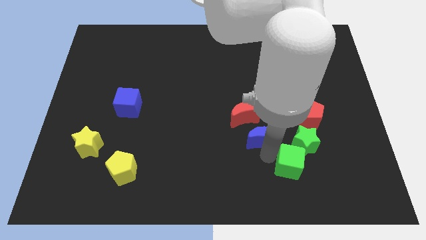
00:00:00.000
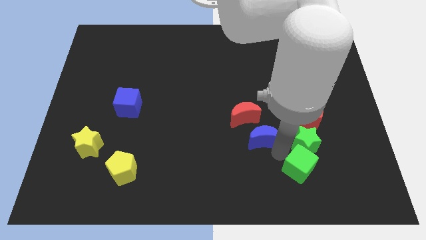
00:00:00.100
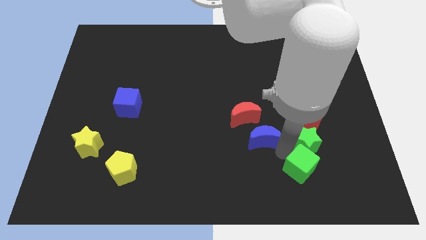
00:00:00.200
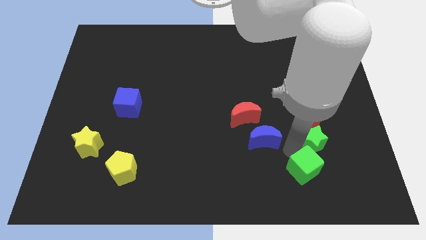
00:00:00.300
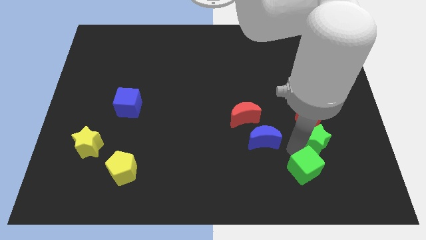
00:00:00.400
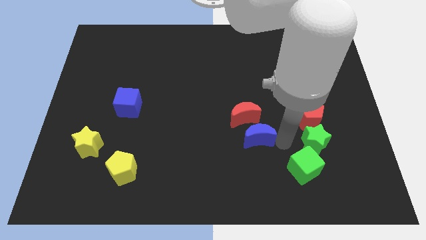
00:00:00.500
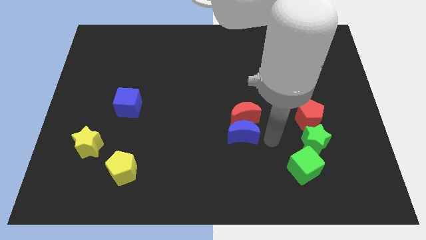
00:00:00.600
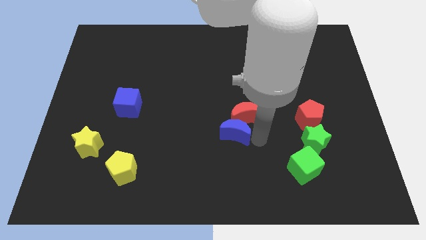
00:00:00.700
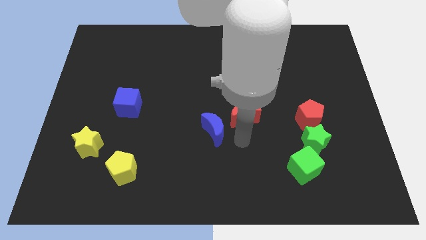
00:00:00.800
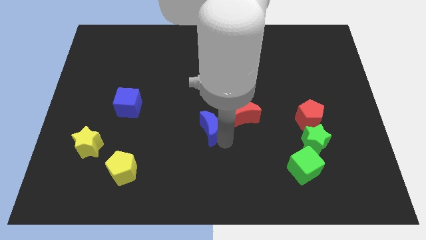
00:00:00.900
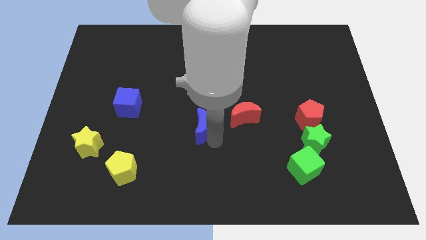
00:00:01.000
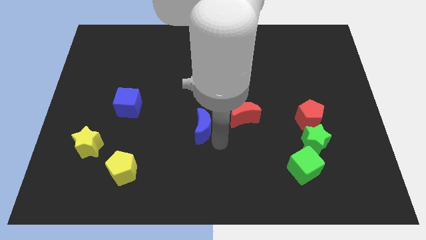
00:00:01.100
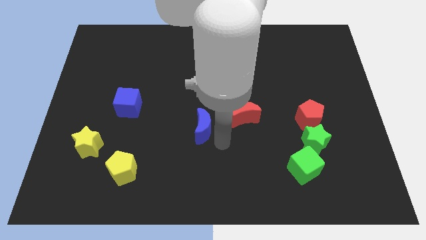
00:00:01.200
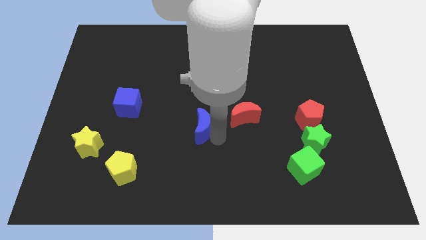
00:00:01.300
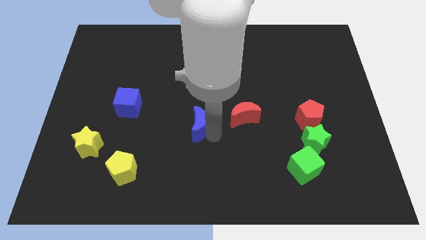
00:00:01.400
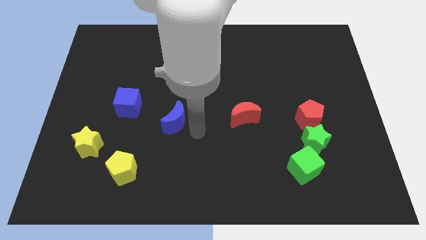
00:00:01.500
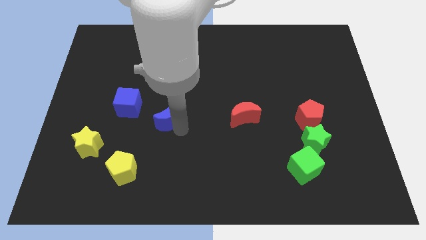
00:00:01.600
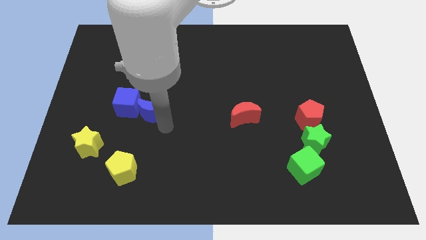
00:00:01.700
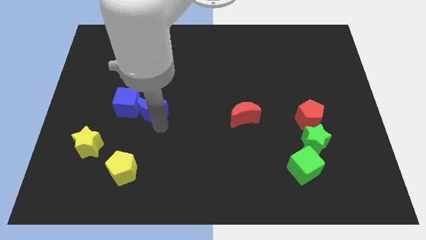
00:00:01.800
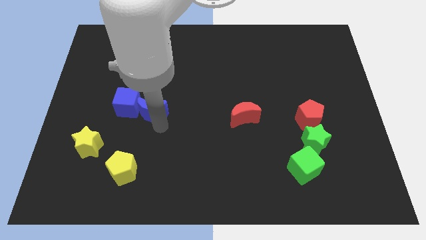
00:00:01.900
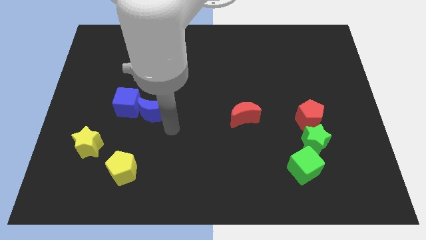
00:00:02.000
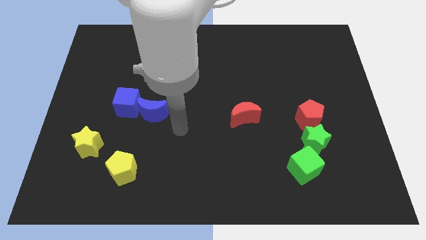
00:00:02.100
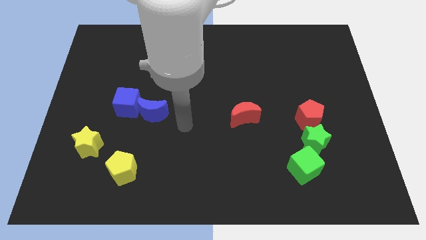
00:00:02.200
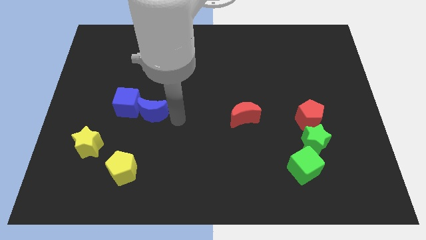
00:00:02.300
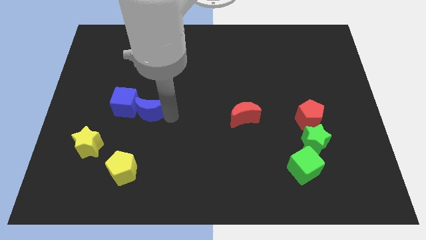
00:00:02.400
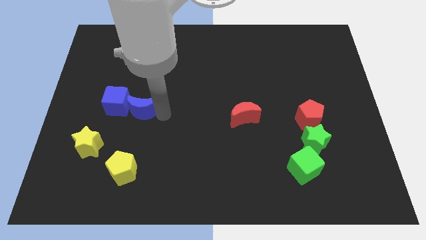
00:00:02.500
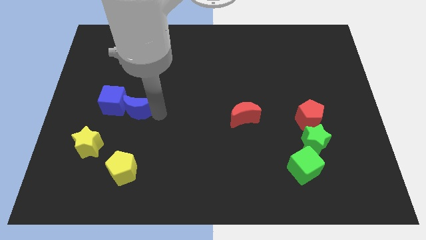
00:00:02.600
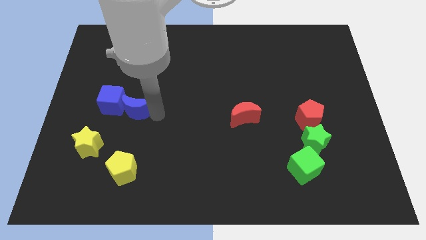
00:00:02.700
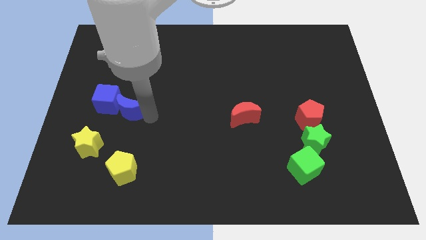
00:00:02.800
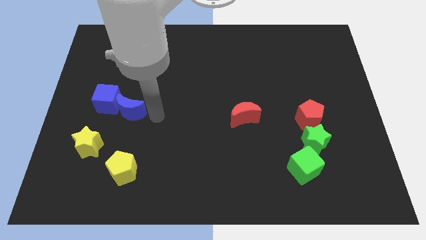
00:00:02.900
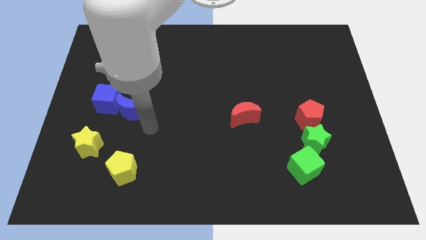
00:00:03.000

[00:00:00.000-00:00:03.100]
move the blue crescent into the blue cube

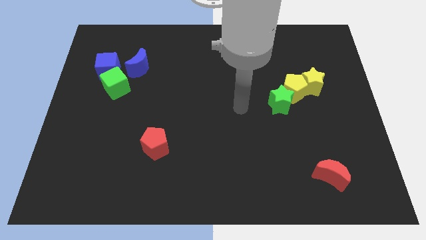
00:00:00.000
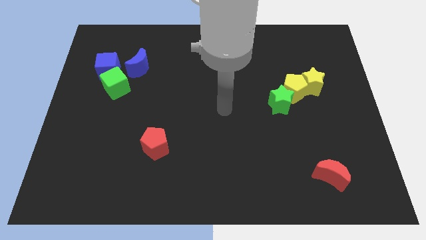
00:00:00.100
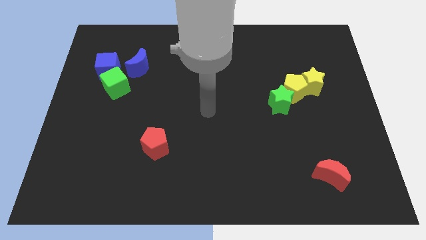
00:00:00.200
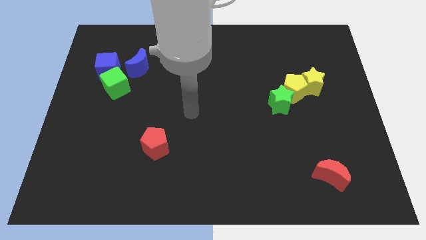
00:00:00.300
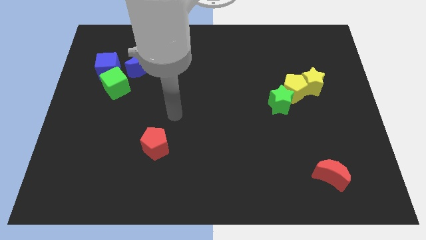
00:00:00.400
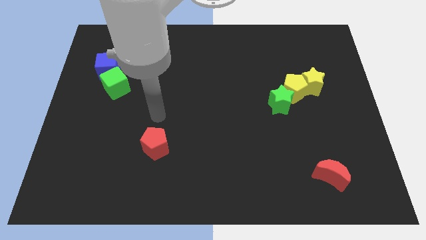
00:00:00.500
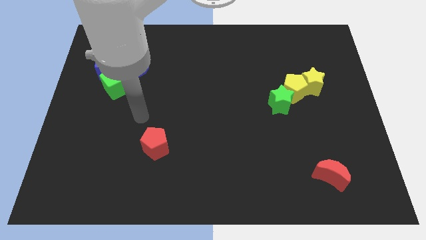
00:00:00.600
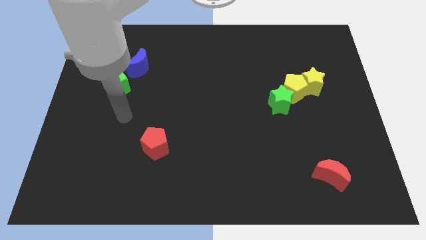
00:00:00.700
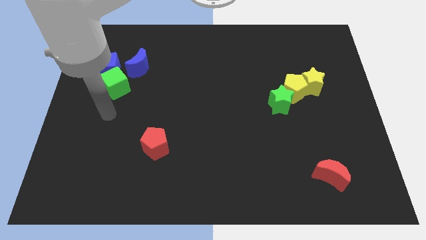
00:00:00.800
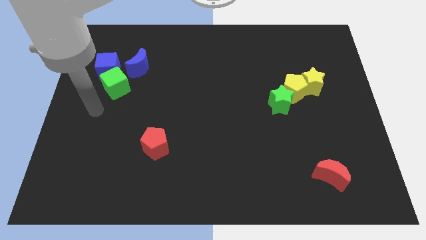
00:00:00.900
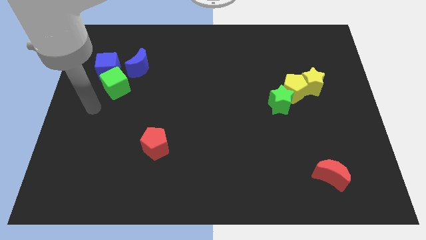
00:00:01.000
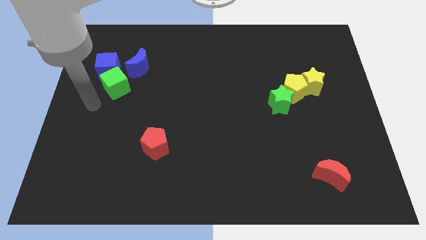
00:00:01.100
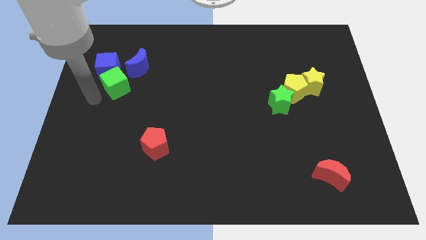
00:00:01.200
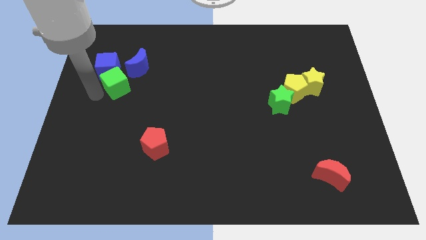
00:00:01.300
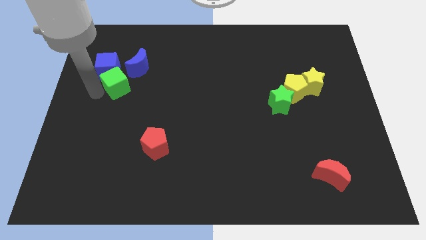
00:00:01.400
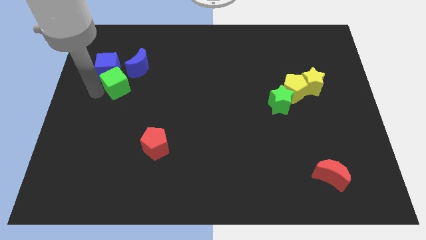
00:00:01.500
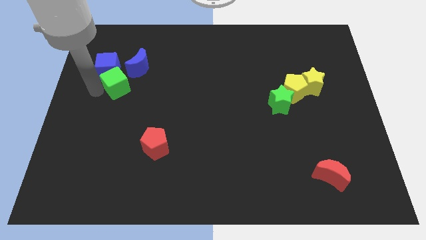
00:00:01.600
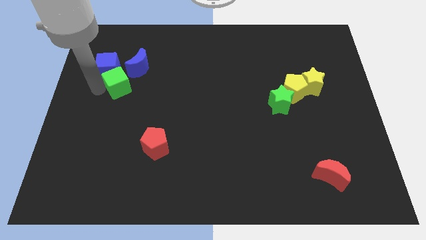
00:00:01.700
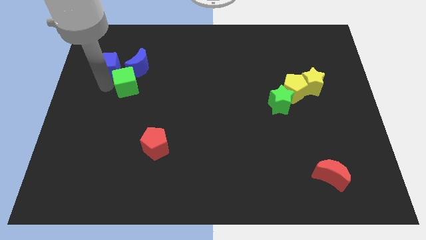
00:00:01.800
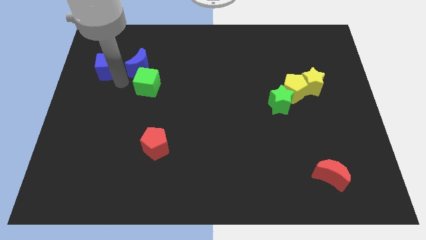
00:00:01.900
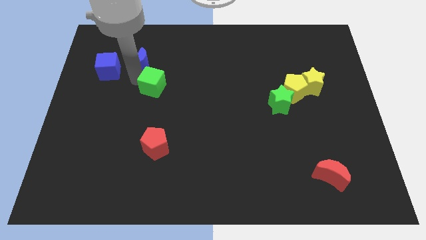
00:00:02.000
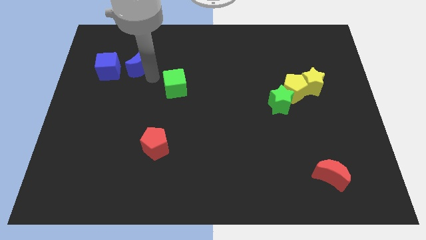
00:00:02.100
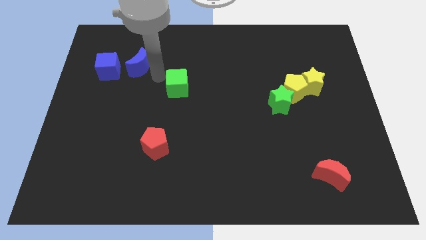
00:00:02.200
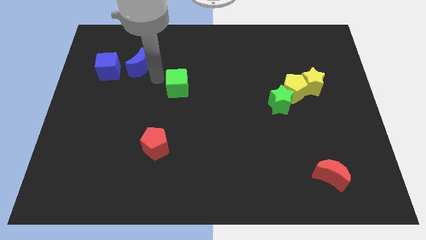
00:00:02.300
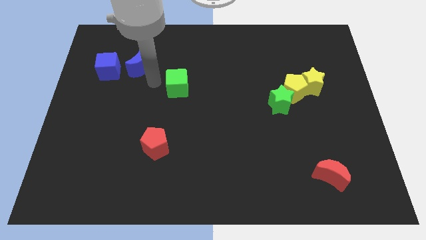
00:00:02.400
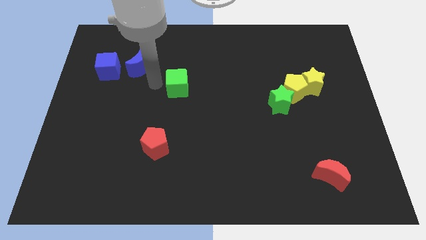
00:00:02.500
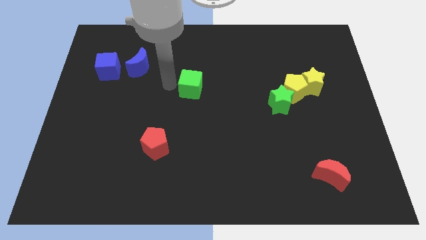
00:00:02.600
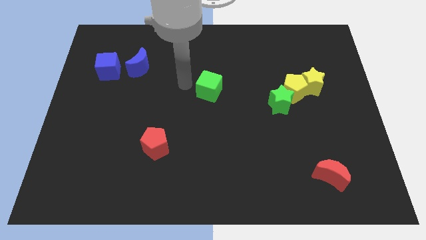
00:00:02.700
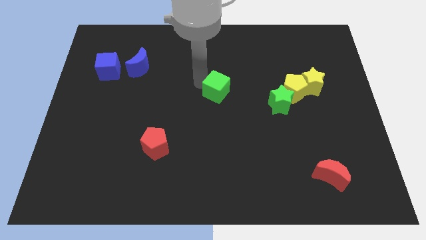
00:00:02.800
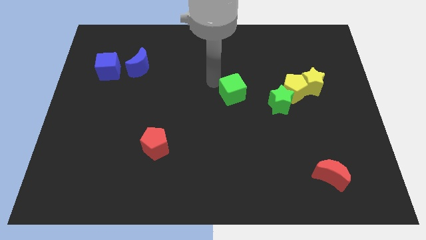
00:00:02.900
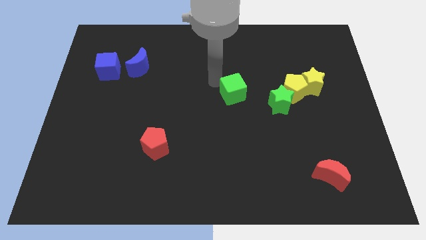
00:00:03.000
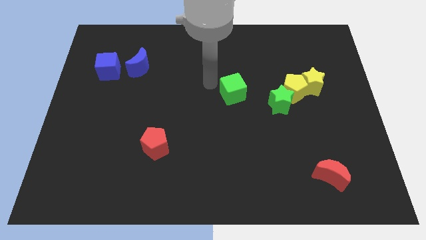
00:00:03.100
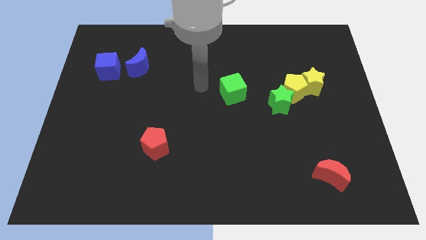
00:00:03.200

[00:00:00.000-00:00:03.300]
place the green cube diagonally top right to the red pentagon

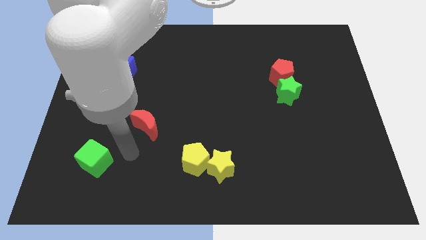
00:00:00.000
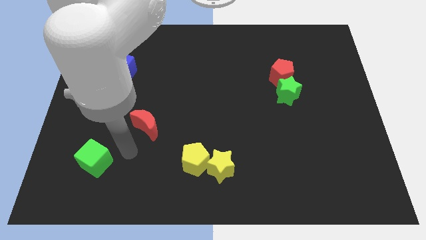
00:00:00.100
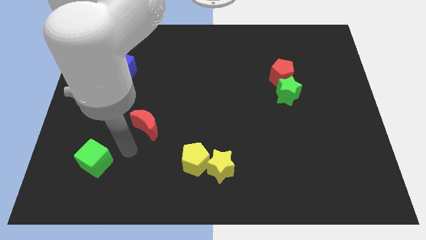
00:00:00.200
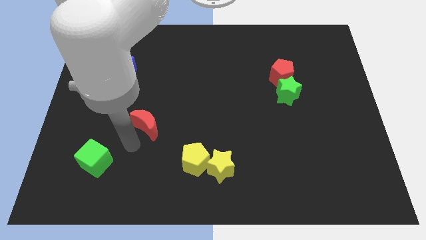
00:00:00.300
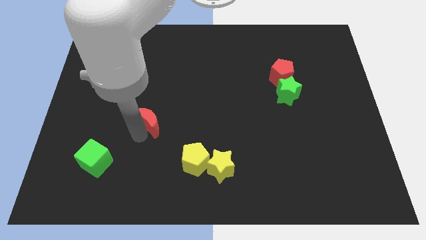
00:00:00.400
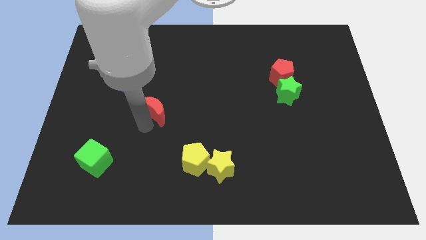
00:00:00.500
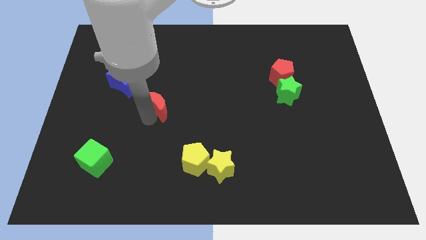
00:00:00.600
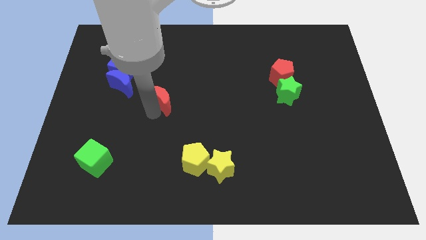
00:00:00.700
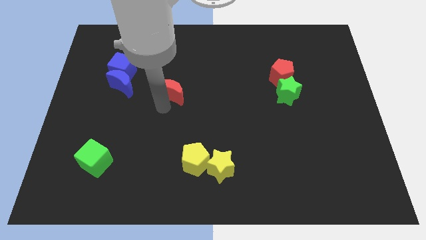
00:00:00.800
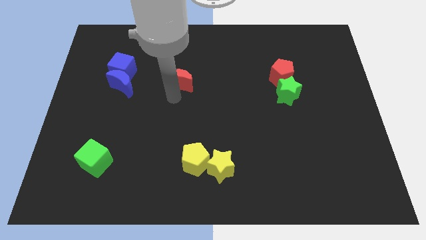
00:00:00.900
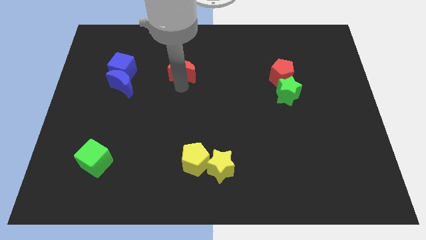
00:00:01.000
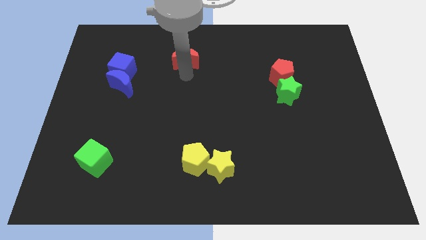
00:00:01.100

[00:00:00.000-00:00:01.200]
place the red moon parallel to the left of red pentagon

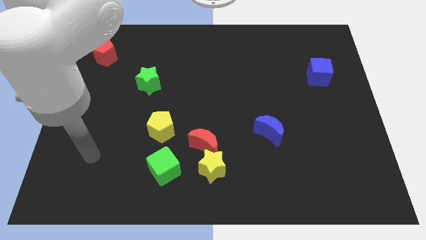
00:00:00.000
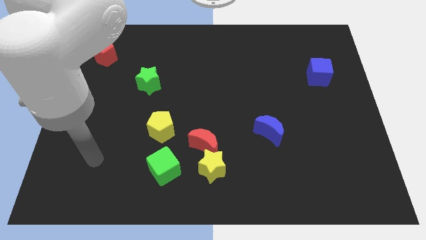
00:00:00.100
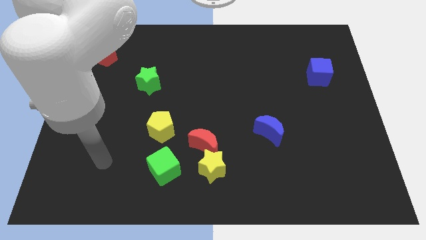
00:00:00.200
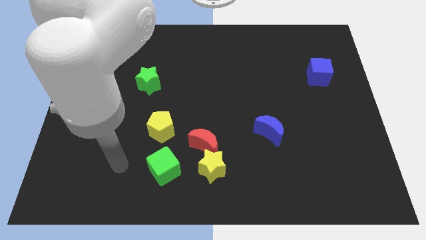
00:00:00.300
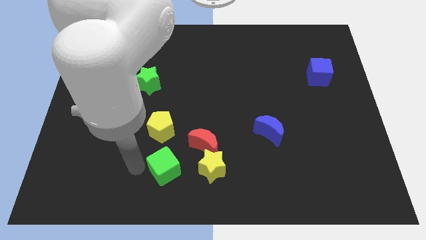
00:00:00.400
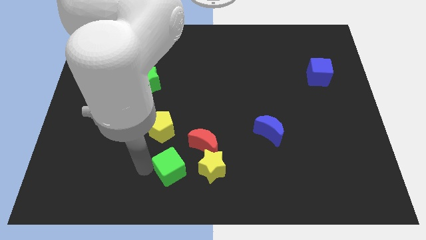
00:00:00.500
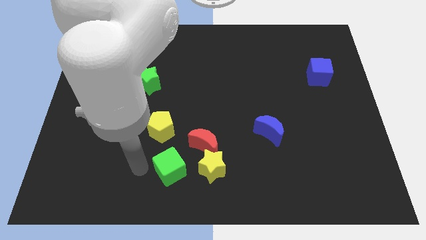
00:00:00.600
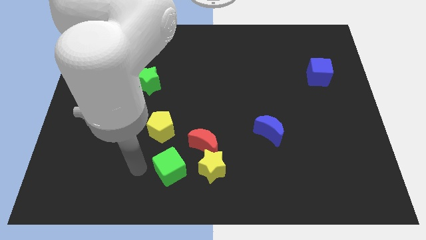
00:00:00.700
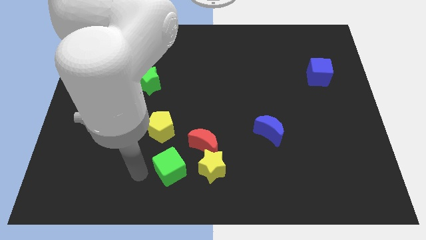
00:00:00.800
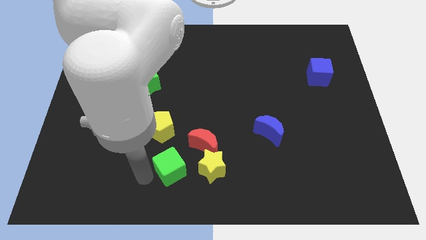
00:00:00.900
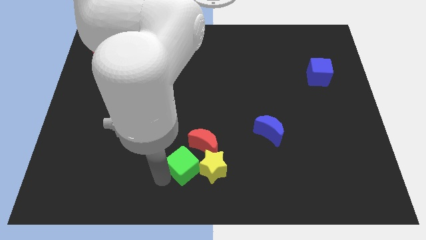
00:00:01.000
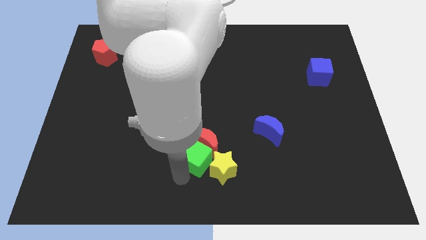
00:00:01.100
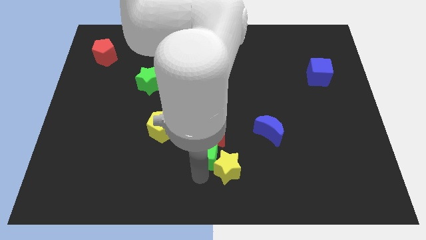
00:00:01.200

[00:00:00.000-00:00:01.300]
move the green cube into the red crescent

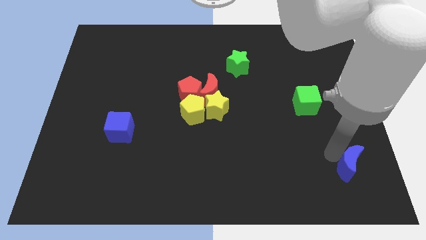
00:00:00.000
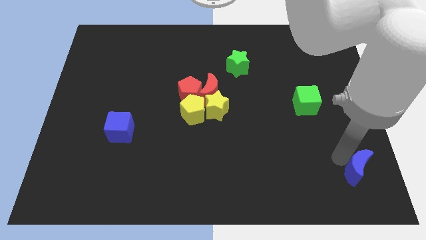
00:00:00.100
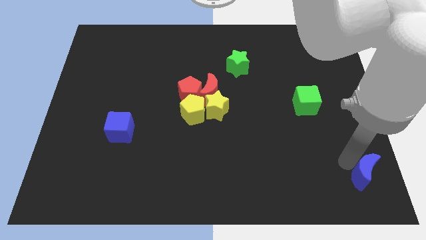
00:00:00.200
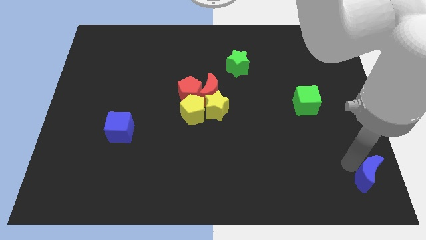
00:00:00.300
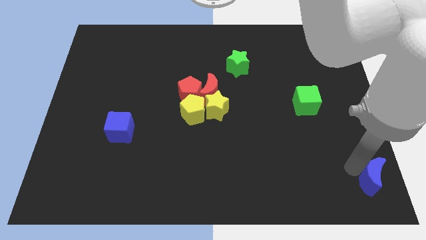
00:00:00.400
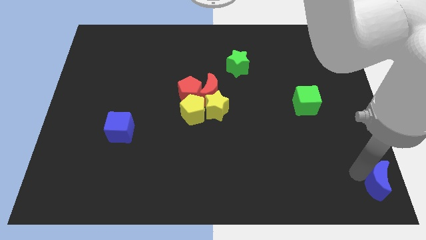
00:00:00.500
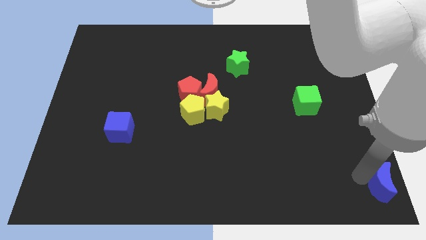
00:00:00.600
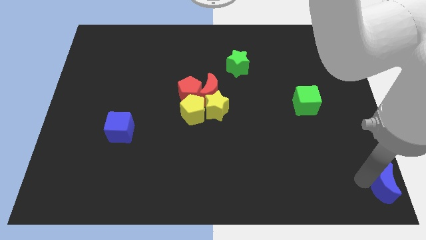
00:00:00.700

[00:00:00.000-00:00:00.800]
place blue crescent towards bottom right corner
